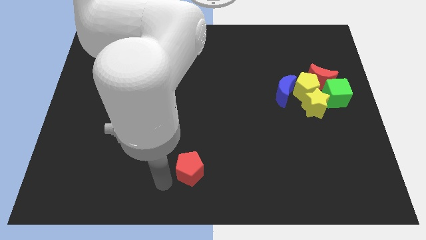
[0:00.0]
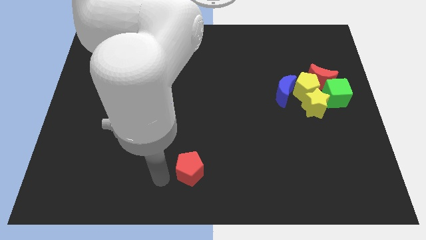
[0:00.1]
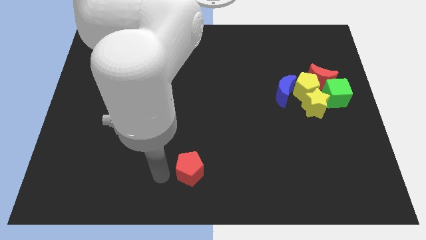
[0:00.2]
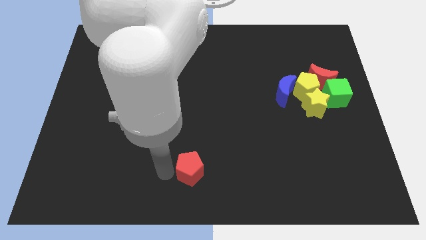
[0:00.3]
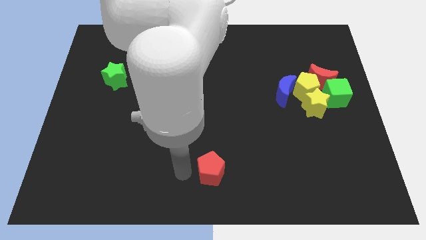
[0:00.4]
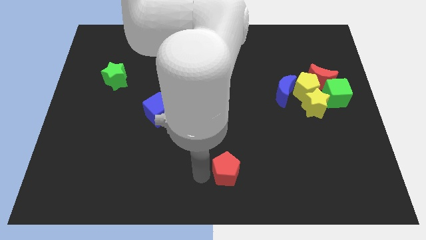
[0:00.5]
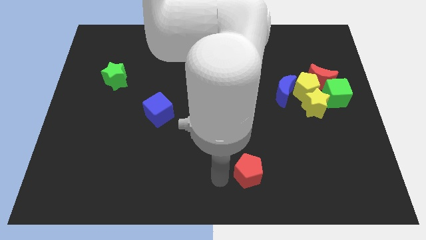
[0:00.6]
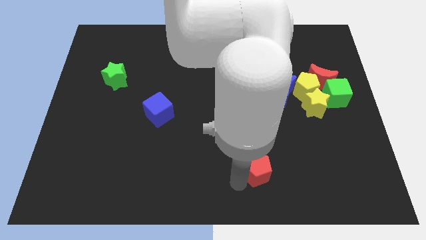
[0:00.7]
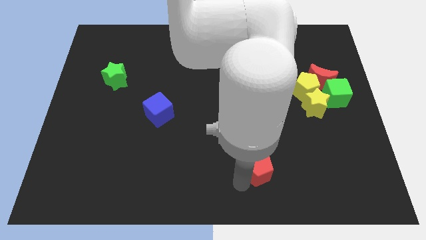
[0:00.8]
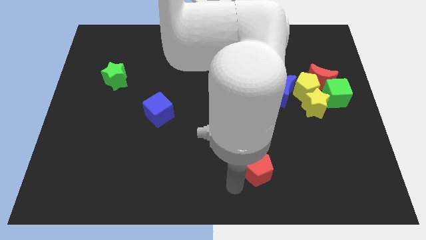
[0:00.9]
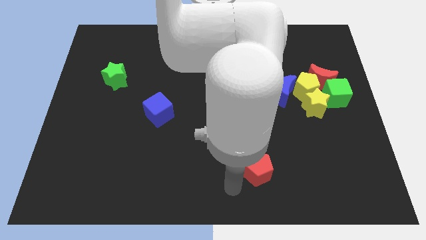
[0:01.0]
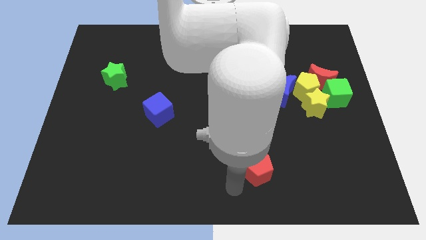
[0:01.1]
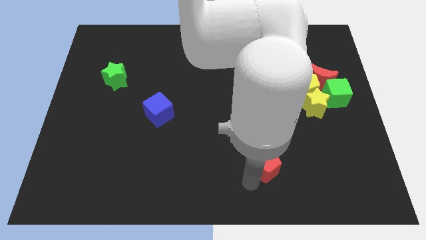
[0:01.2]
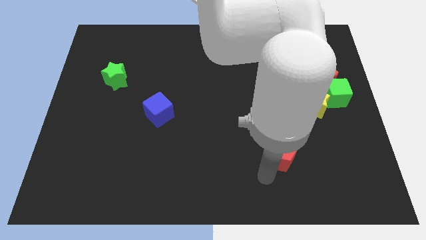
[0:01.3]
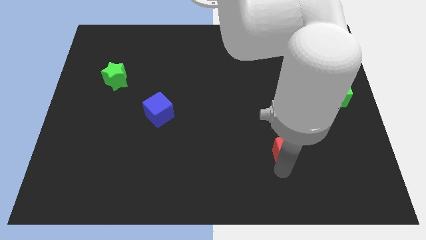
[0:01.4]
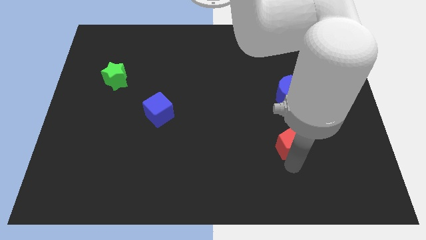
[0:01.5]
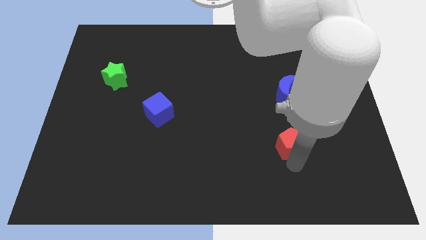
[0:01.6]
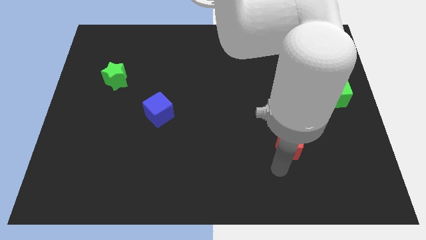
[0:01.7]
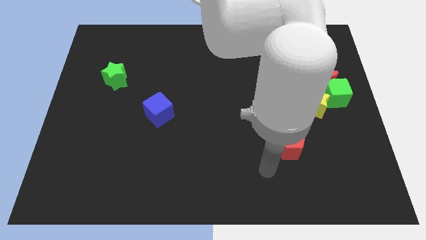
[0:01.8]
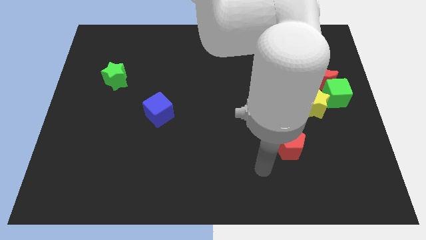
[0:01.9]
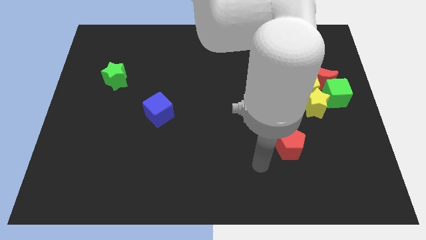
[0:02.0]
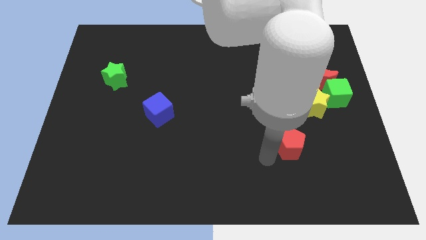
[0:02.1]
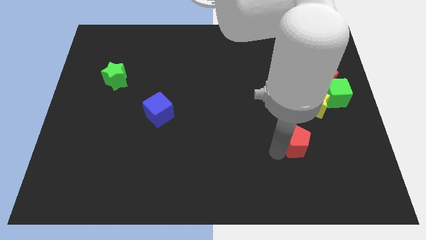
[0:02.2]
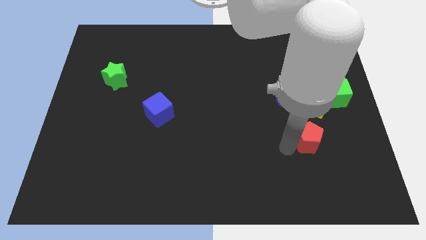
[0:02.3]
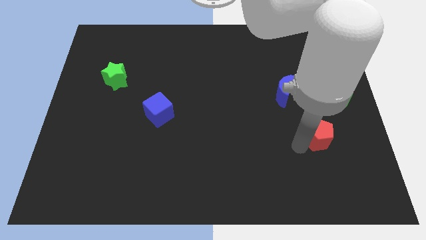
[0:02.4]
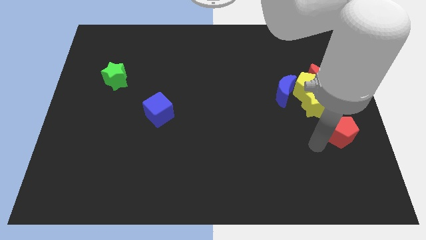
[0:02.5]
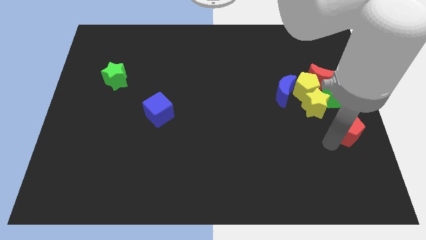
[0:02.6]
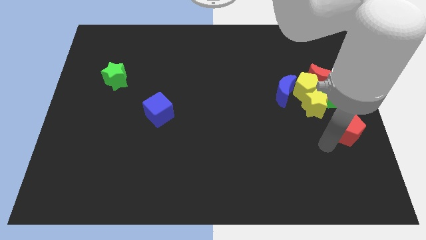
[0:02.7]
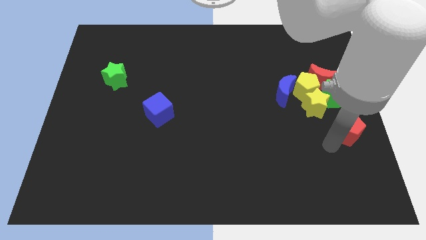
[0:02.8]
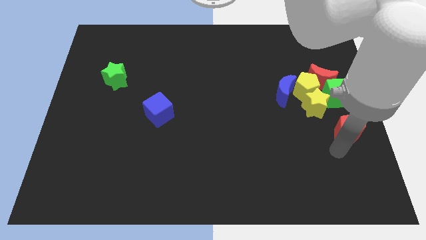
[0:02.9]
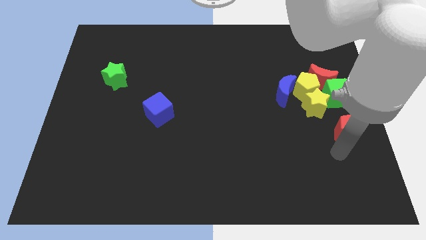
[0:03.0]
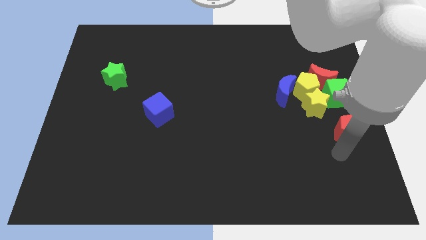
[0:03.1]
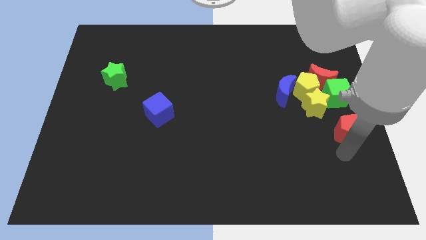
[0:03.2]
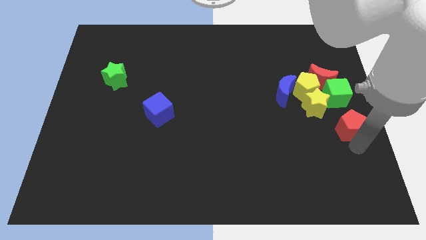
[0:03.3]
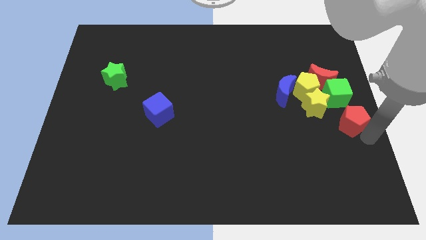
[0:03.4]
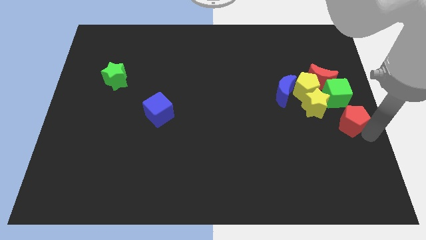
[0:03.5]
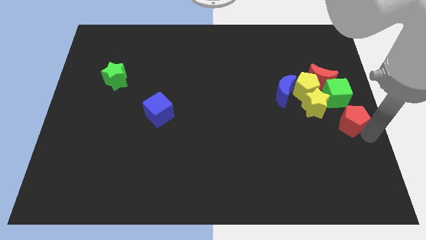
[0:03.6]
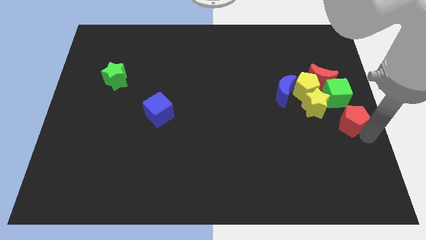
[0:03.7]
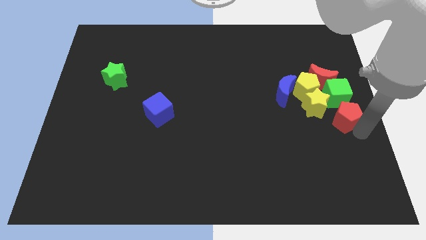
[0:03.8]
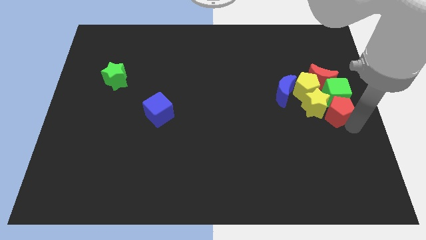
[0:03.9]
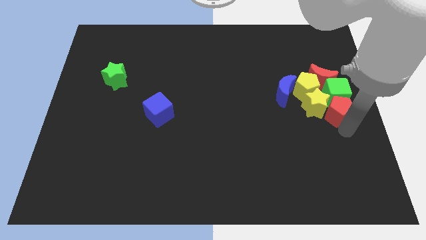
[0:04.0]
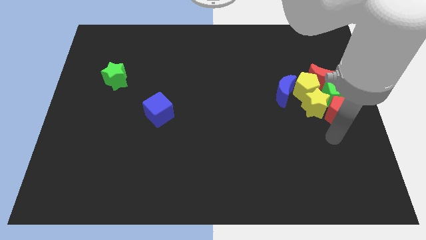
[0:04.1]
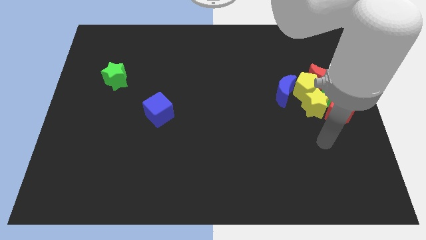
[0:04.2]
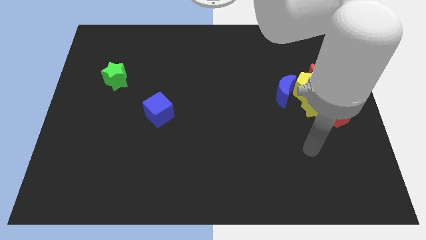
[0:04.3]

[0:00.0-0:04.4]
move the red pentagon below green cube

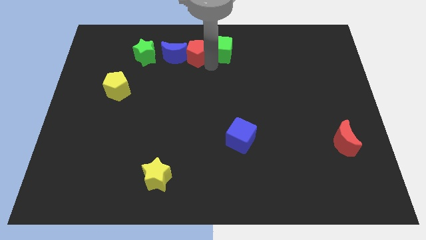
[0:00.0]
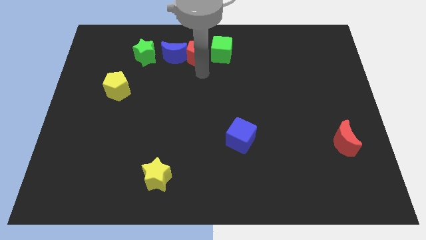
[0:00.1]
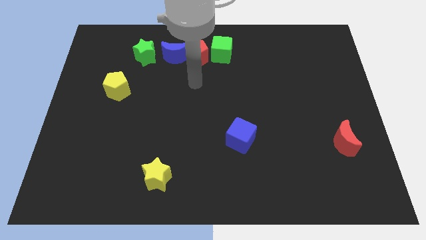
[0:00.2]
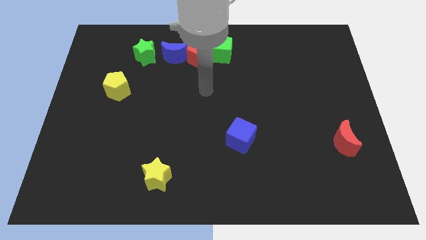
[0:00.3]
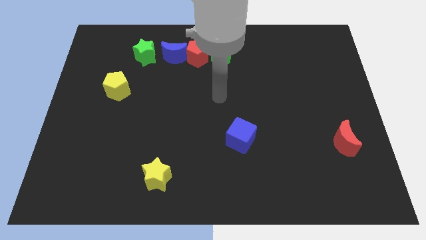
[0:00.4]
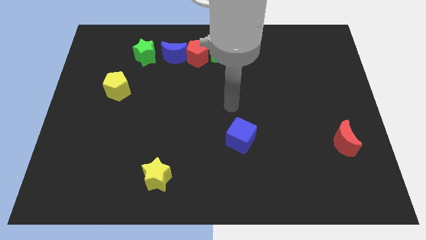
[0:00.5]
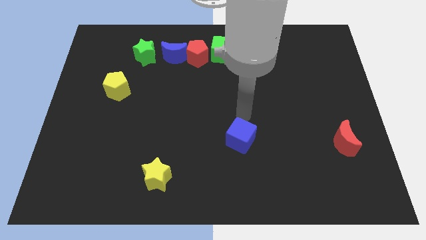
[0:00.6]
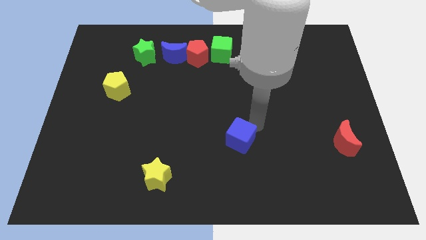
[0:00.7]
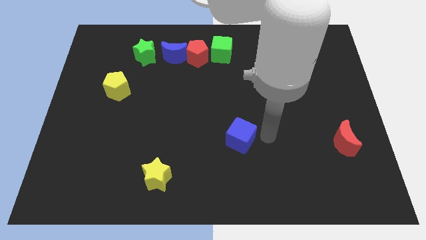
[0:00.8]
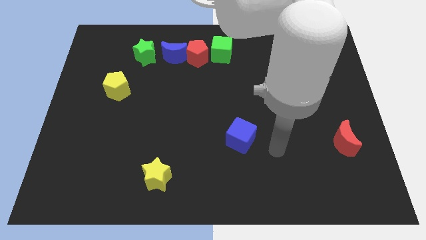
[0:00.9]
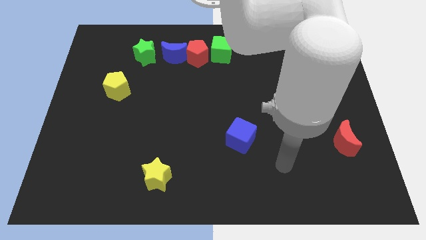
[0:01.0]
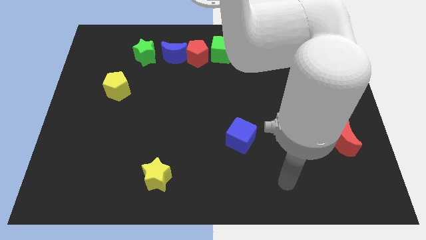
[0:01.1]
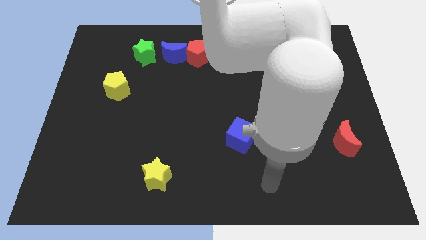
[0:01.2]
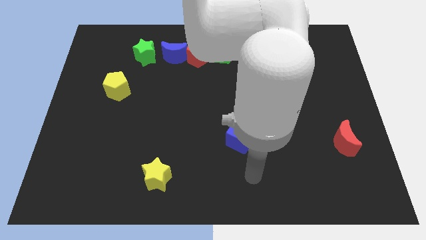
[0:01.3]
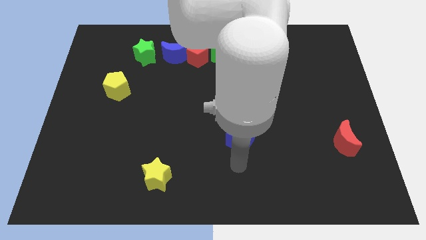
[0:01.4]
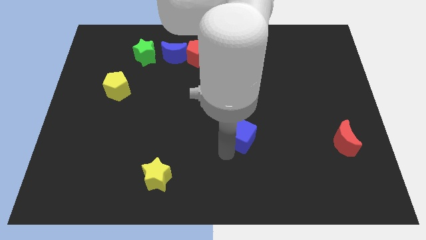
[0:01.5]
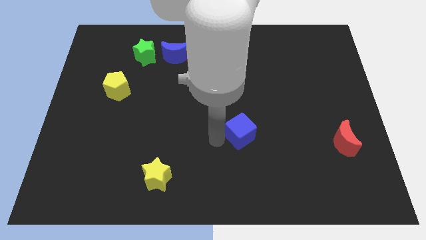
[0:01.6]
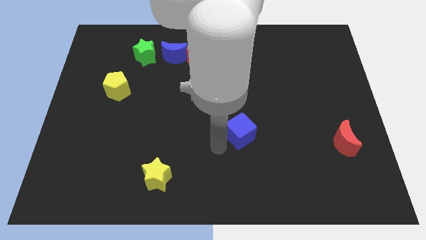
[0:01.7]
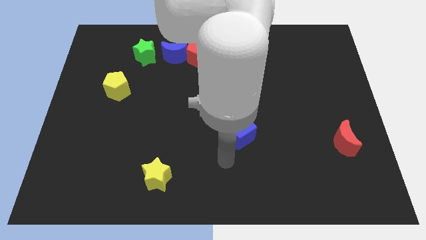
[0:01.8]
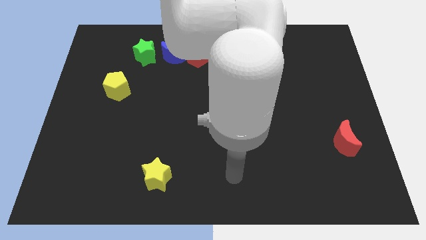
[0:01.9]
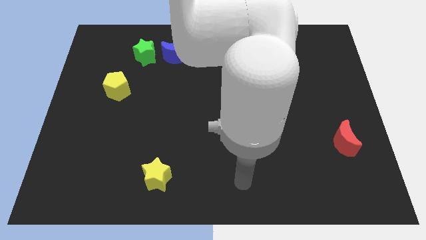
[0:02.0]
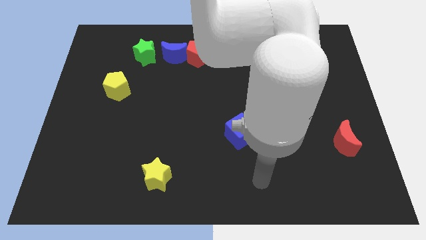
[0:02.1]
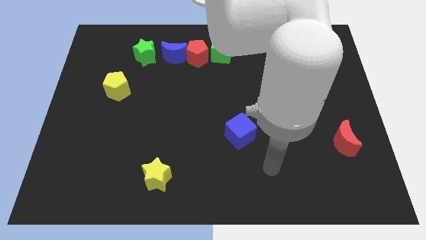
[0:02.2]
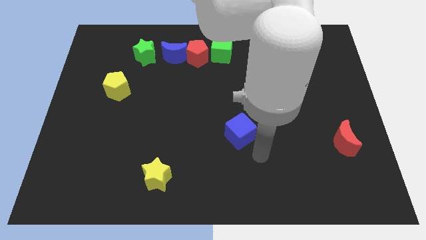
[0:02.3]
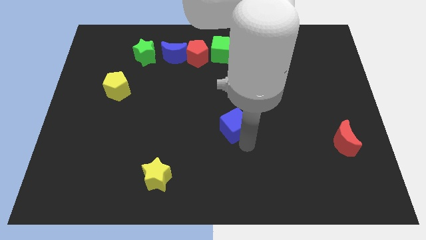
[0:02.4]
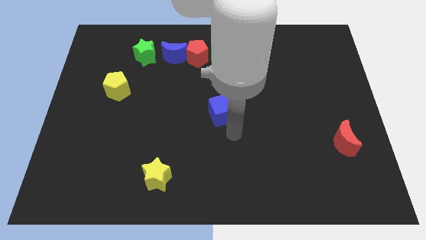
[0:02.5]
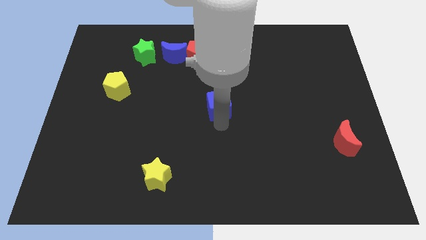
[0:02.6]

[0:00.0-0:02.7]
slightly move the blue cube towards the center of the board

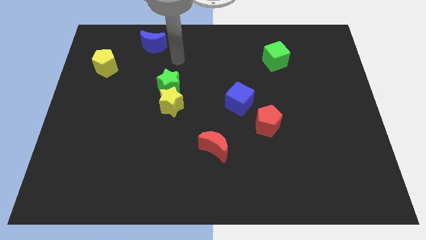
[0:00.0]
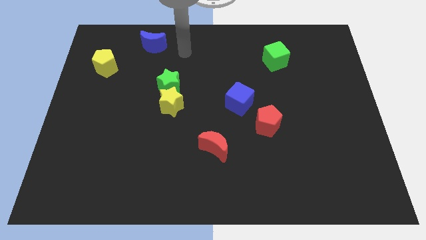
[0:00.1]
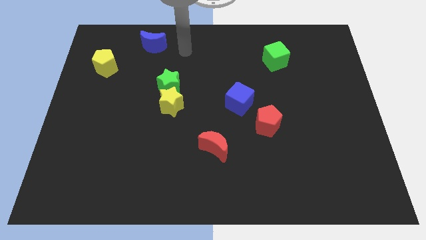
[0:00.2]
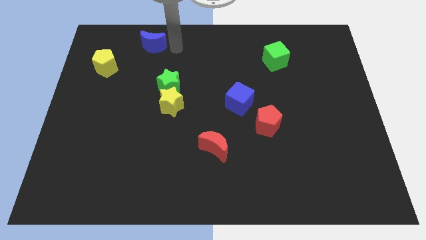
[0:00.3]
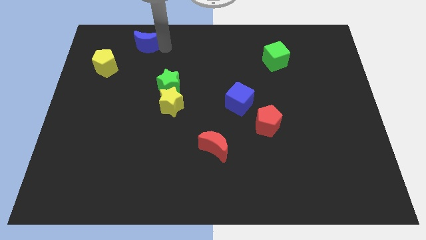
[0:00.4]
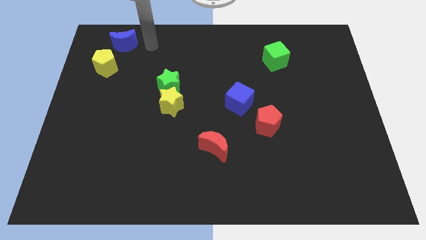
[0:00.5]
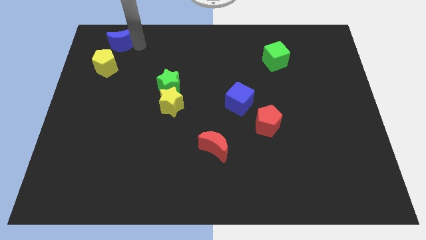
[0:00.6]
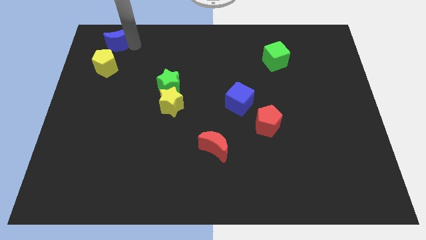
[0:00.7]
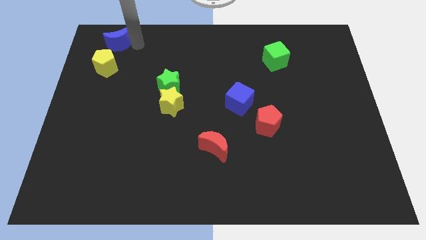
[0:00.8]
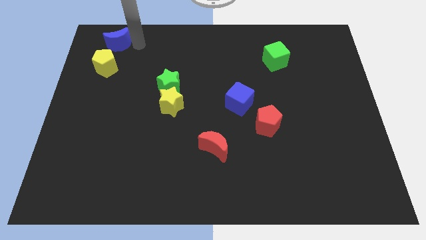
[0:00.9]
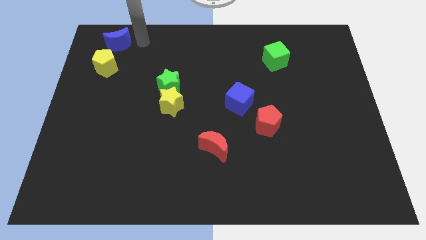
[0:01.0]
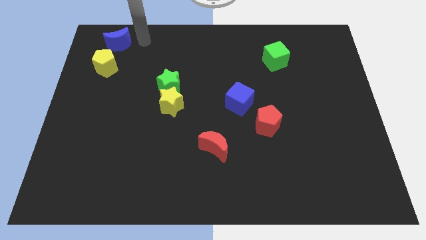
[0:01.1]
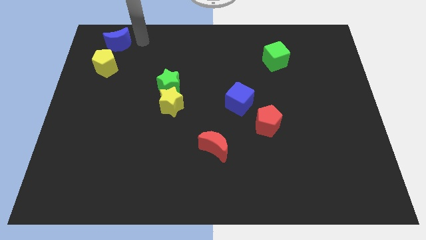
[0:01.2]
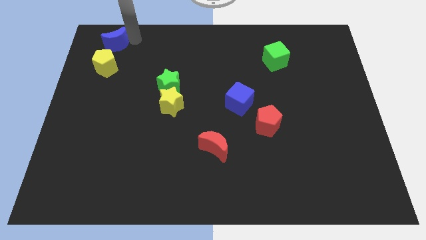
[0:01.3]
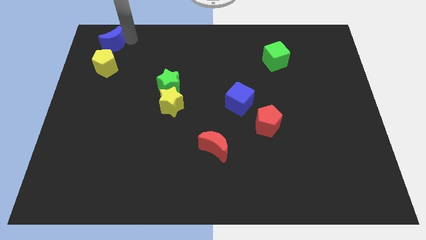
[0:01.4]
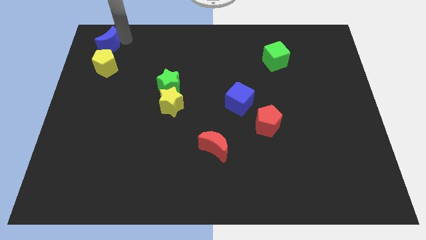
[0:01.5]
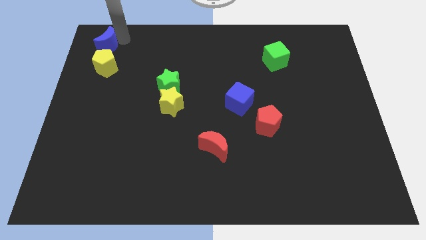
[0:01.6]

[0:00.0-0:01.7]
put the blue crescent at the top of yellow pentagon

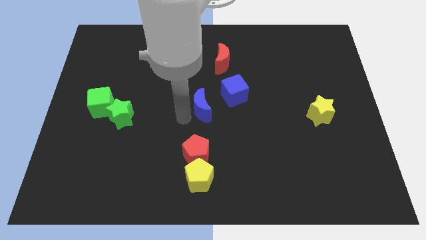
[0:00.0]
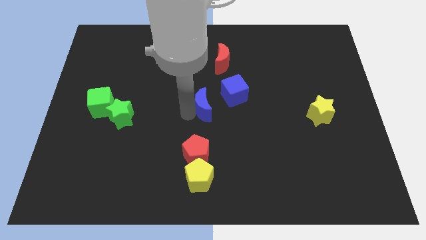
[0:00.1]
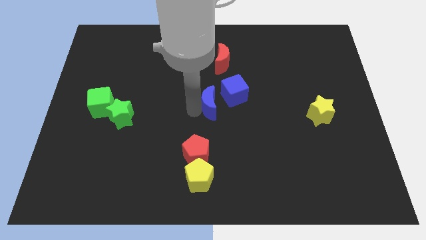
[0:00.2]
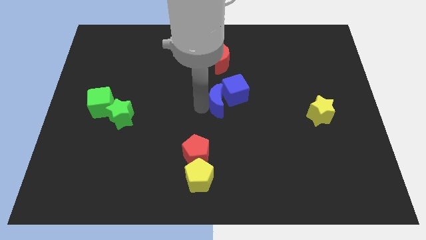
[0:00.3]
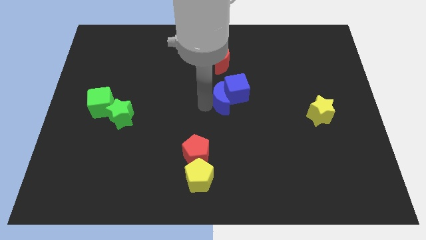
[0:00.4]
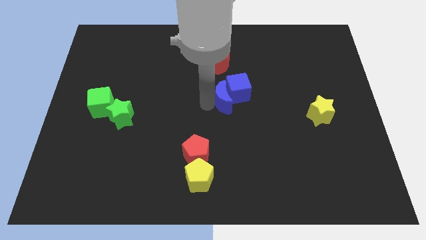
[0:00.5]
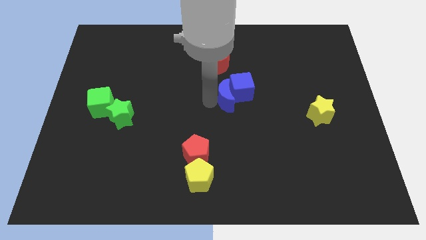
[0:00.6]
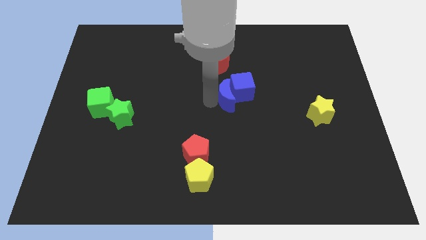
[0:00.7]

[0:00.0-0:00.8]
push blue moon into blue cube
